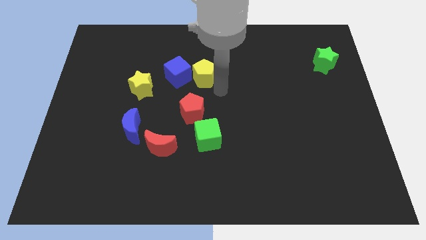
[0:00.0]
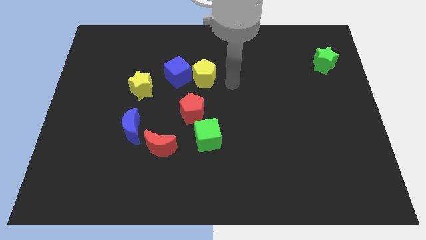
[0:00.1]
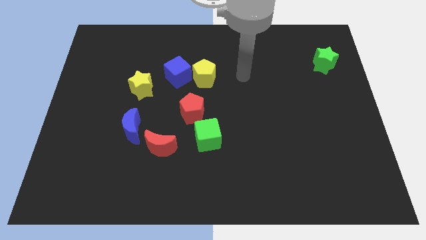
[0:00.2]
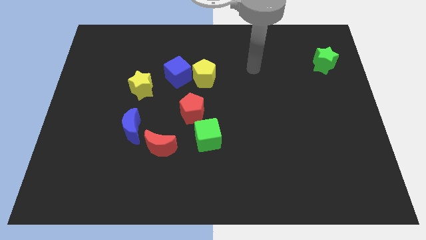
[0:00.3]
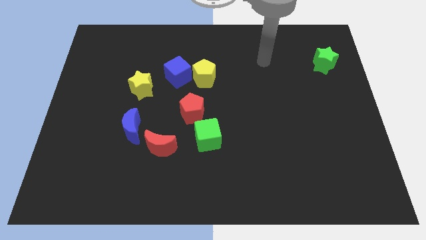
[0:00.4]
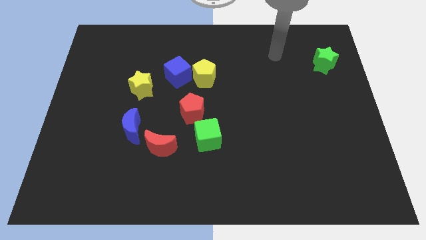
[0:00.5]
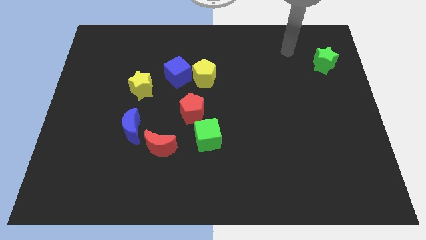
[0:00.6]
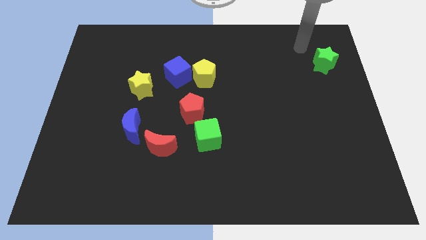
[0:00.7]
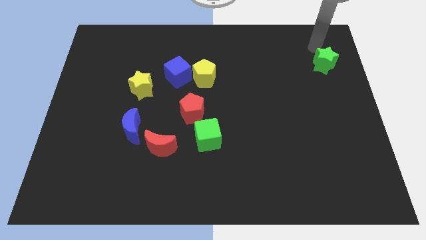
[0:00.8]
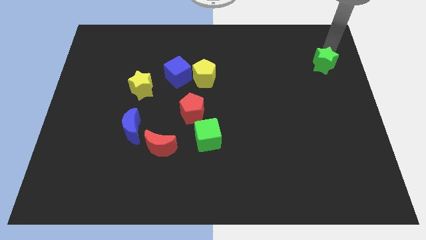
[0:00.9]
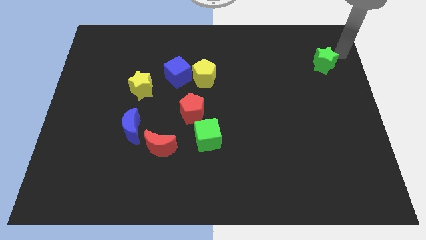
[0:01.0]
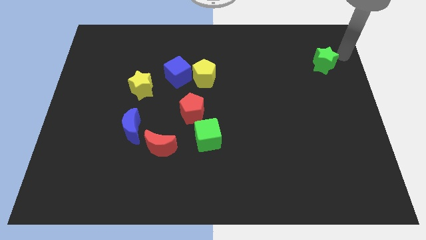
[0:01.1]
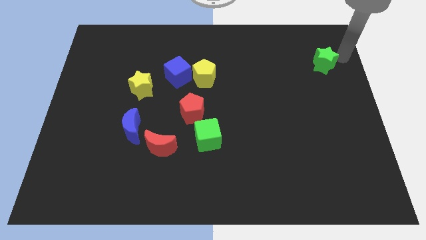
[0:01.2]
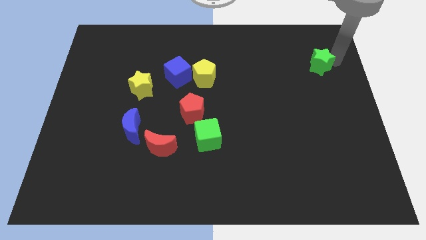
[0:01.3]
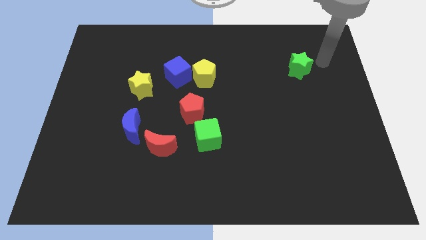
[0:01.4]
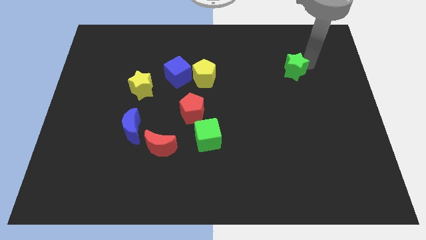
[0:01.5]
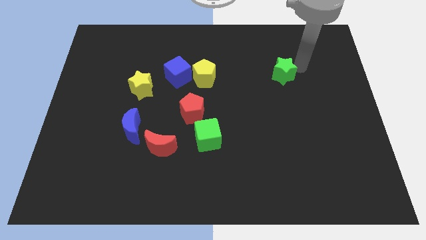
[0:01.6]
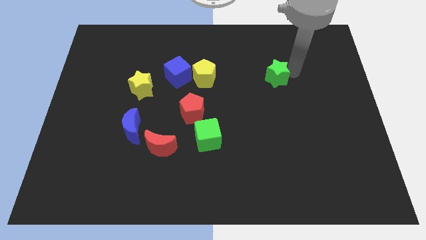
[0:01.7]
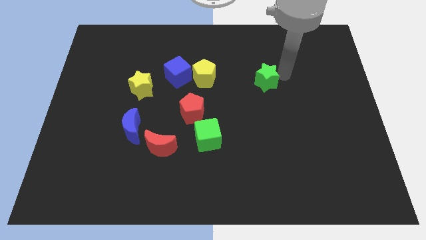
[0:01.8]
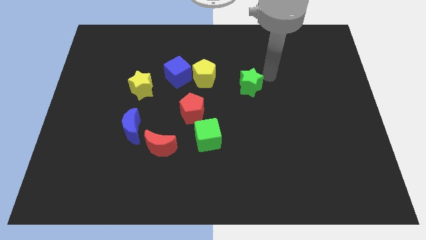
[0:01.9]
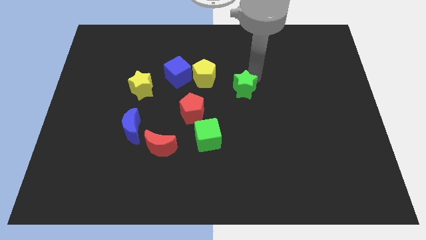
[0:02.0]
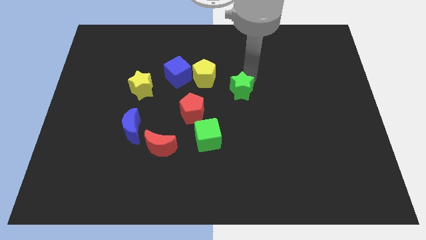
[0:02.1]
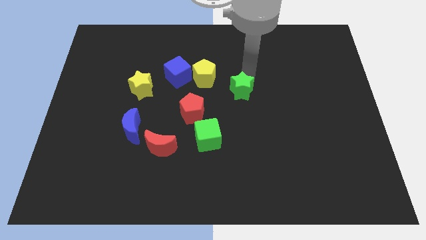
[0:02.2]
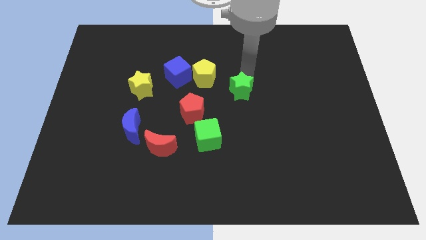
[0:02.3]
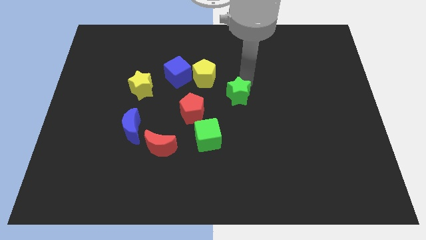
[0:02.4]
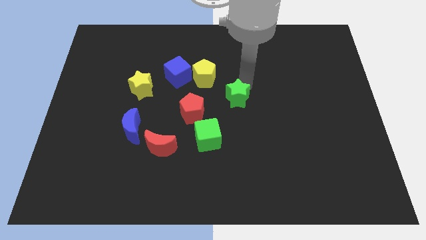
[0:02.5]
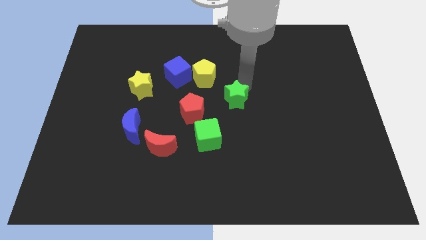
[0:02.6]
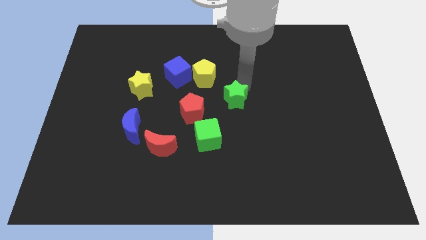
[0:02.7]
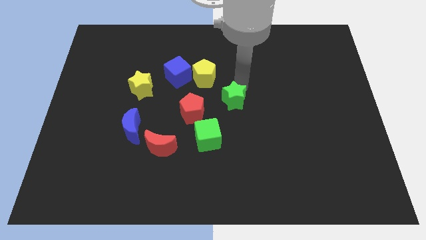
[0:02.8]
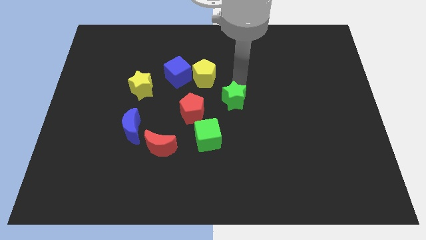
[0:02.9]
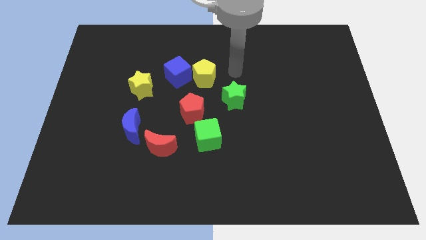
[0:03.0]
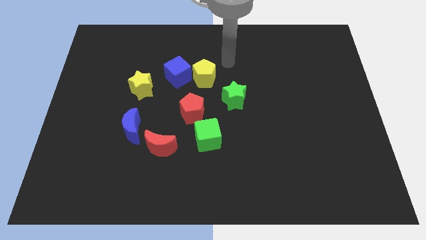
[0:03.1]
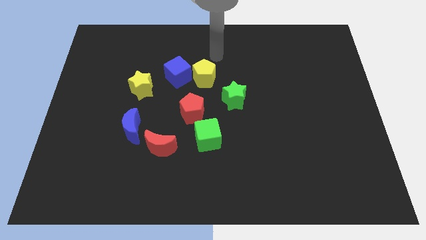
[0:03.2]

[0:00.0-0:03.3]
move the green star to the right of the red pentagon

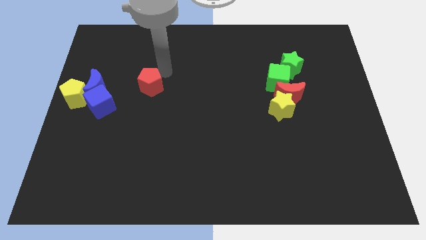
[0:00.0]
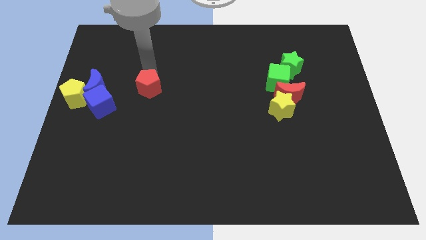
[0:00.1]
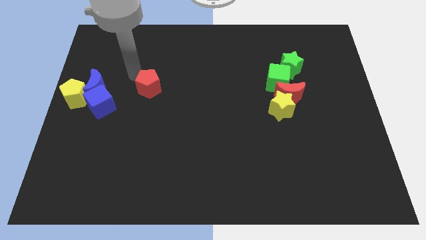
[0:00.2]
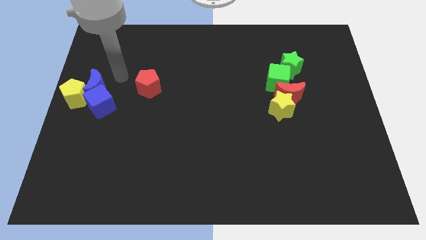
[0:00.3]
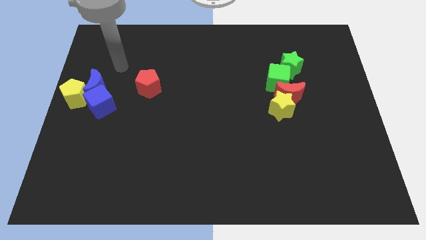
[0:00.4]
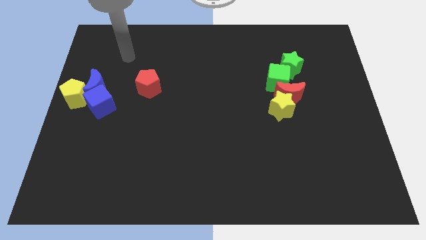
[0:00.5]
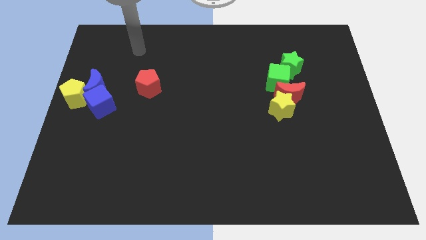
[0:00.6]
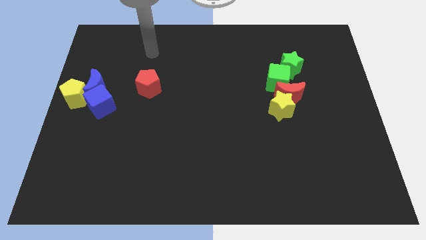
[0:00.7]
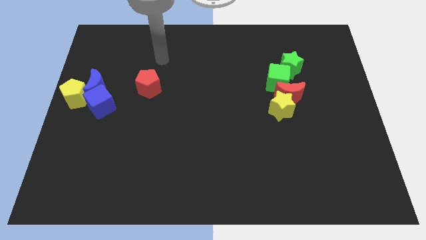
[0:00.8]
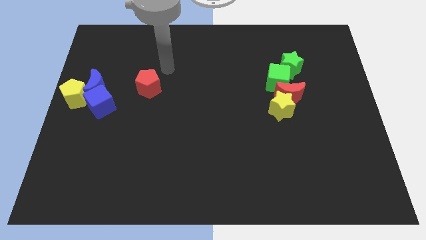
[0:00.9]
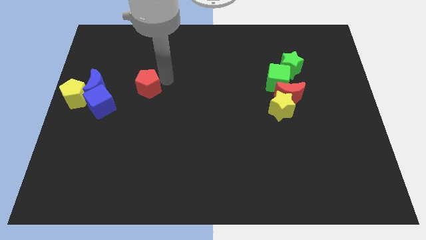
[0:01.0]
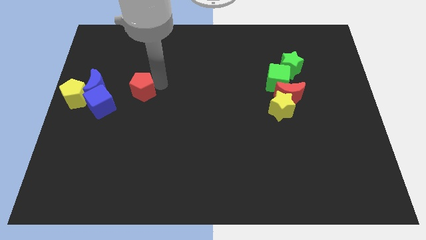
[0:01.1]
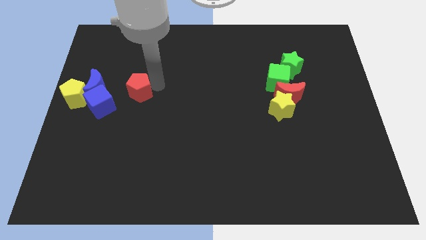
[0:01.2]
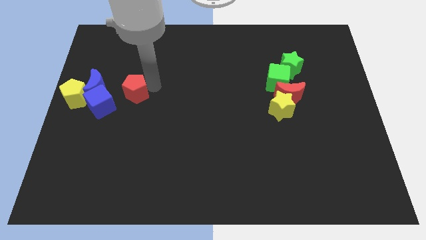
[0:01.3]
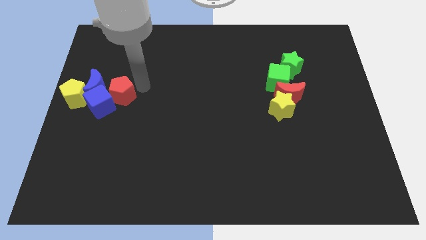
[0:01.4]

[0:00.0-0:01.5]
move the red pentagon into the blue cube

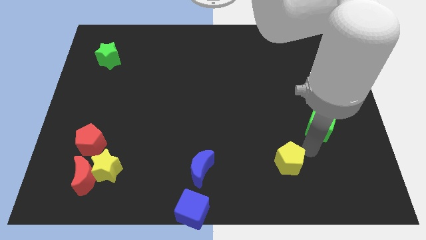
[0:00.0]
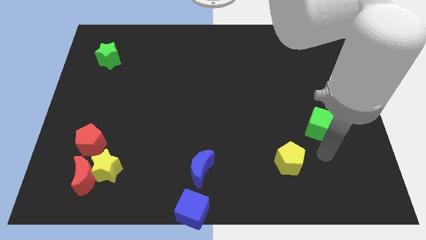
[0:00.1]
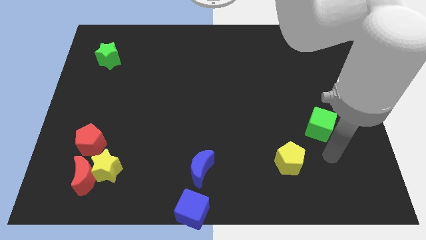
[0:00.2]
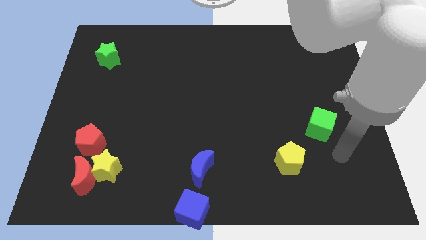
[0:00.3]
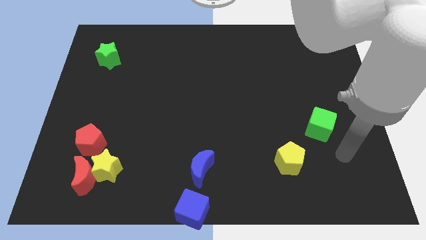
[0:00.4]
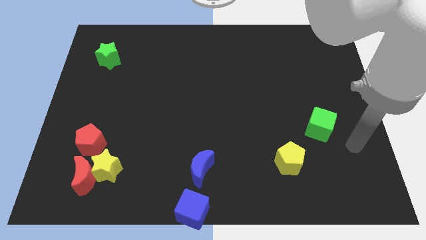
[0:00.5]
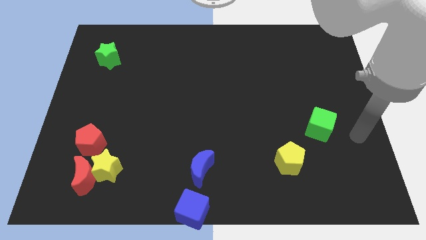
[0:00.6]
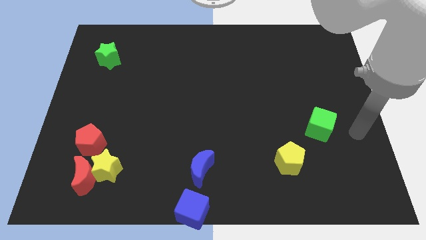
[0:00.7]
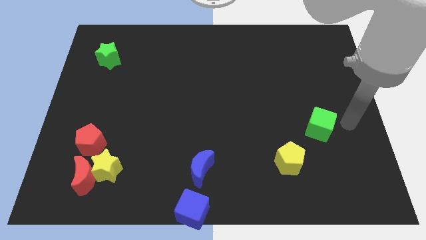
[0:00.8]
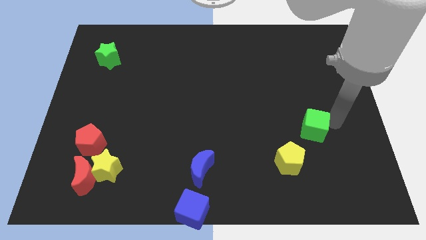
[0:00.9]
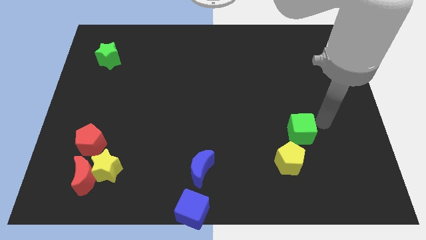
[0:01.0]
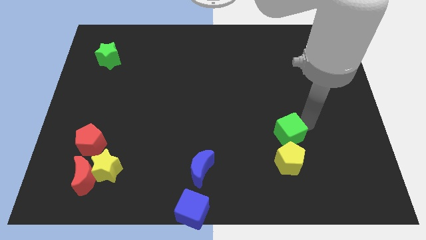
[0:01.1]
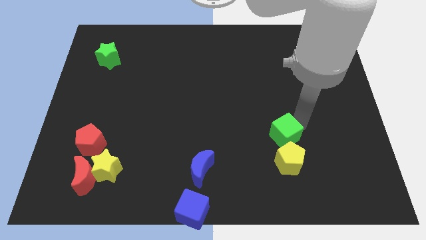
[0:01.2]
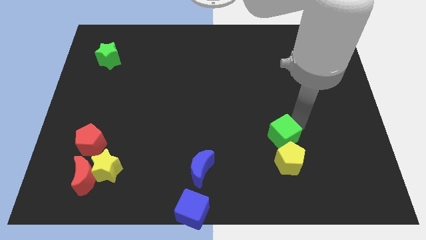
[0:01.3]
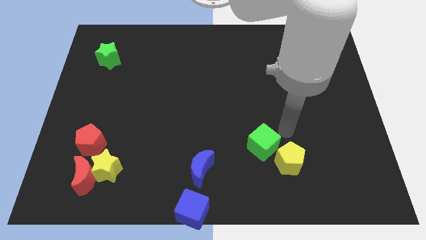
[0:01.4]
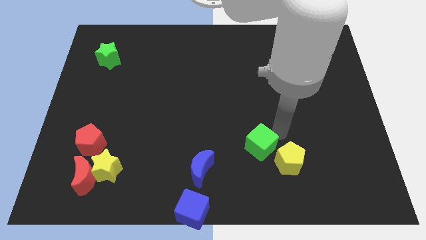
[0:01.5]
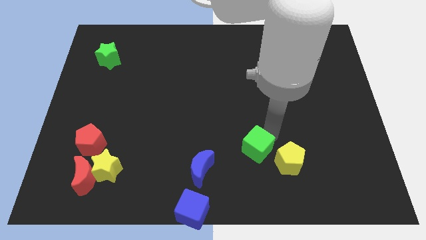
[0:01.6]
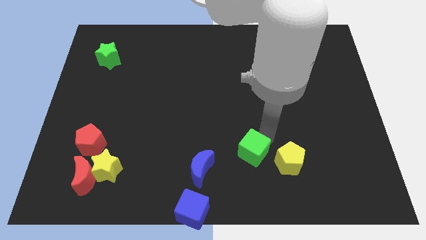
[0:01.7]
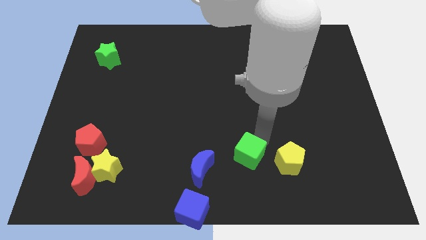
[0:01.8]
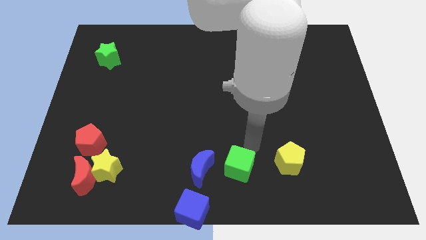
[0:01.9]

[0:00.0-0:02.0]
place the green cube in between the yellow pentagon and blue moon

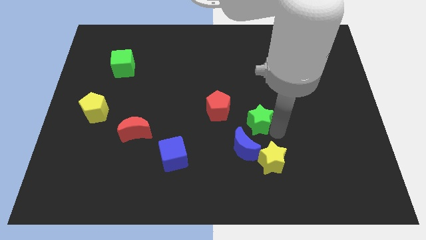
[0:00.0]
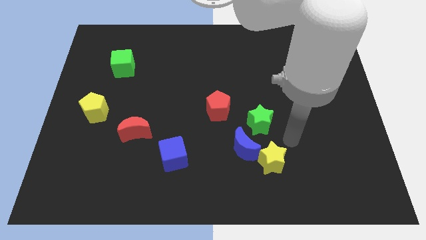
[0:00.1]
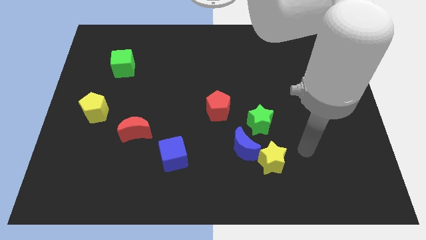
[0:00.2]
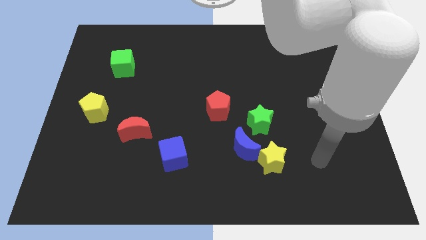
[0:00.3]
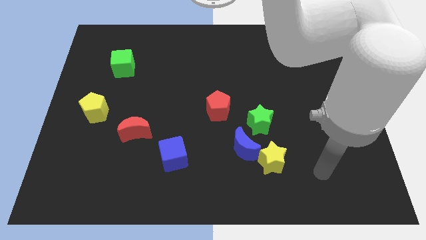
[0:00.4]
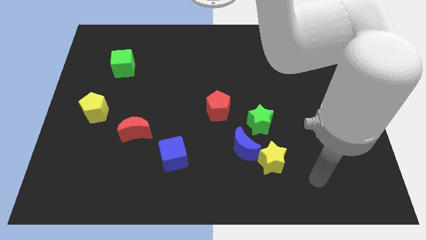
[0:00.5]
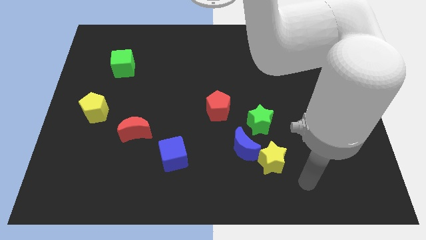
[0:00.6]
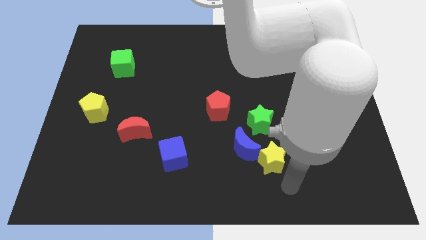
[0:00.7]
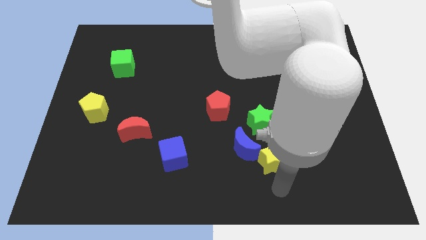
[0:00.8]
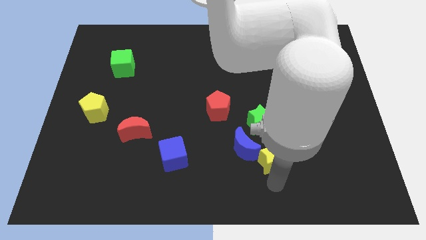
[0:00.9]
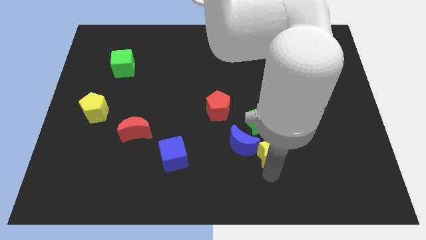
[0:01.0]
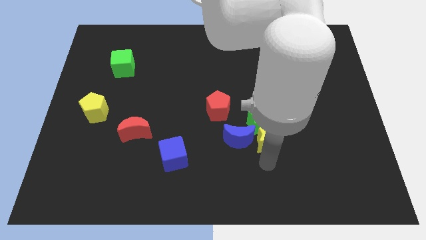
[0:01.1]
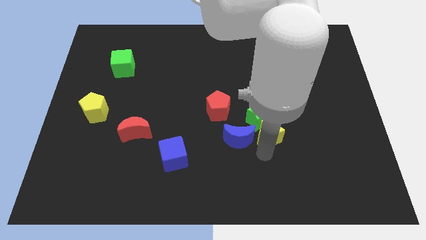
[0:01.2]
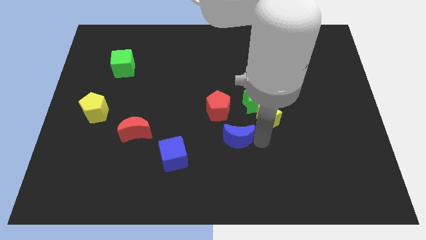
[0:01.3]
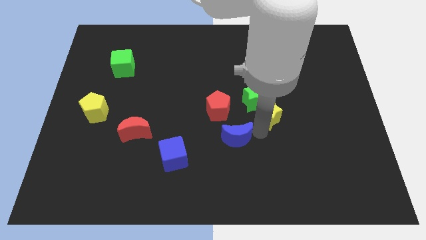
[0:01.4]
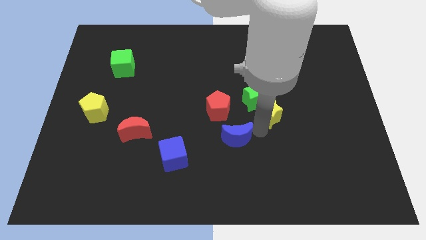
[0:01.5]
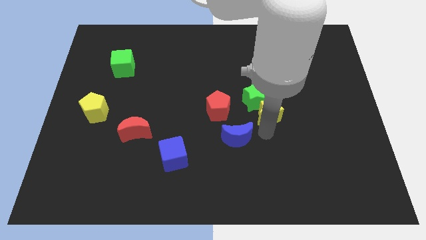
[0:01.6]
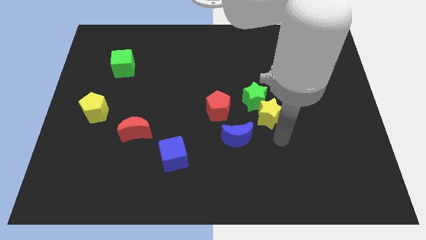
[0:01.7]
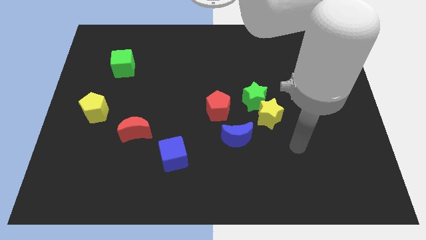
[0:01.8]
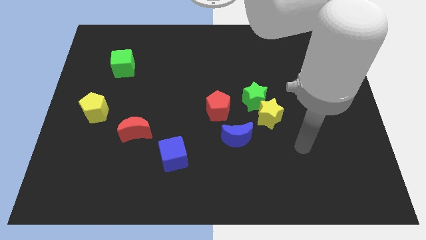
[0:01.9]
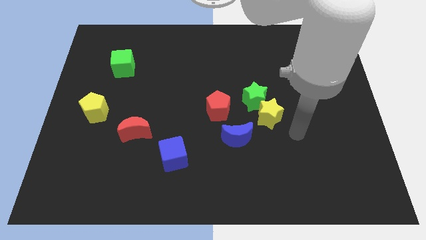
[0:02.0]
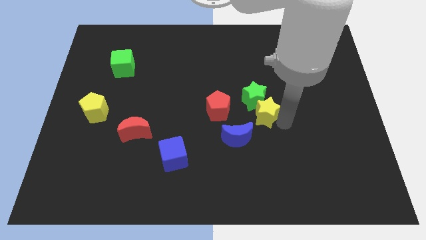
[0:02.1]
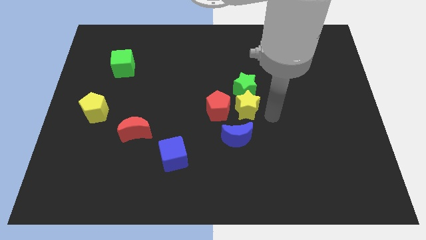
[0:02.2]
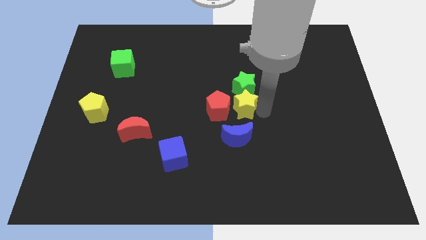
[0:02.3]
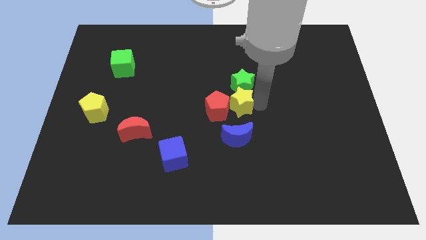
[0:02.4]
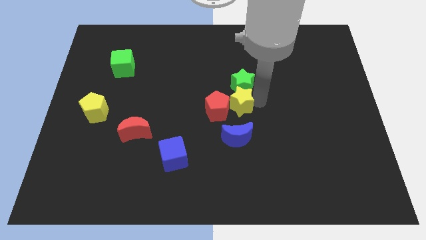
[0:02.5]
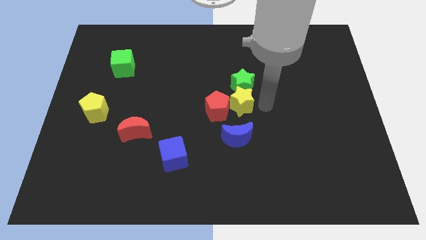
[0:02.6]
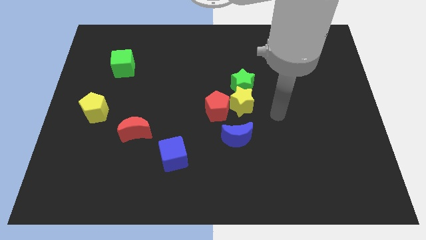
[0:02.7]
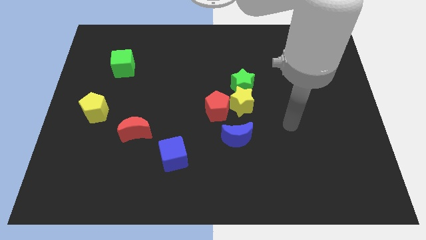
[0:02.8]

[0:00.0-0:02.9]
push the green star with the yellow star
